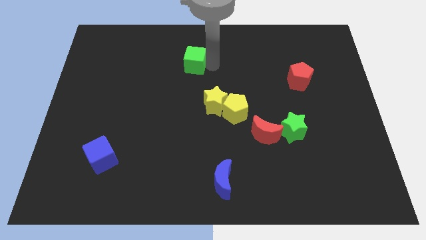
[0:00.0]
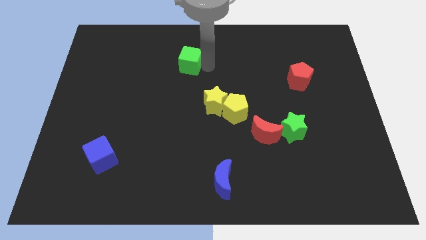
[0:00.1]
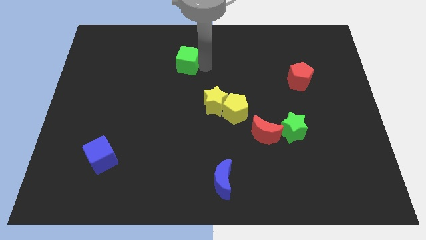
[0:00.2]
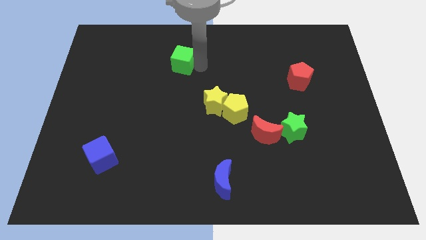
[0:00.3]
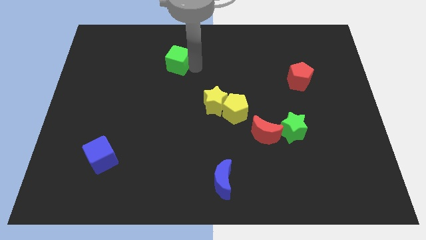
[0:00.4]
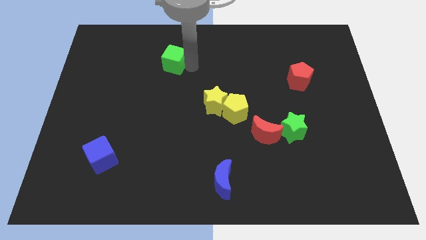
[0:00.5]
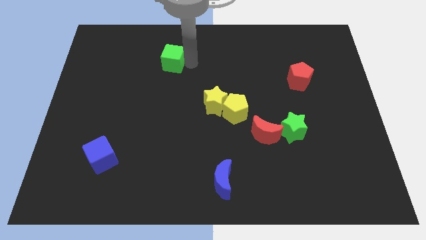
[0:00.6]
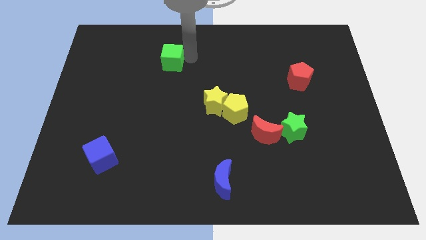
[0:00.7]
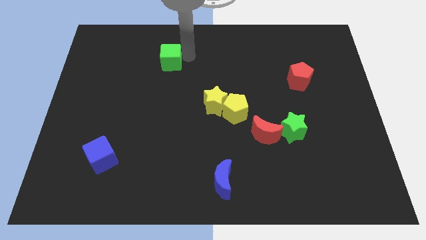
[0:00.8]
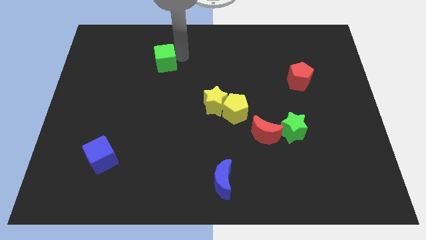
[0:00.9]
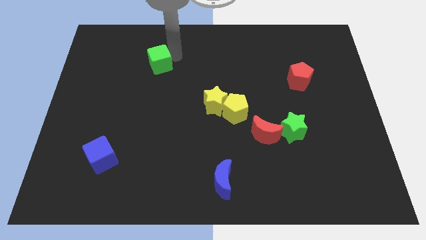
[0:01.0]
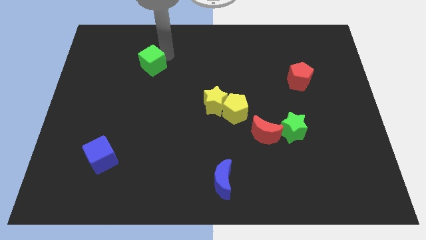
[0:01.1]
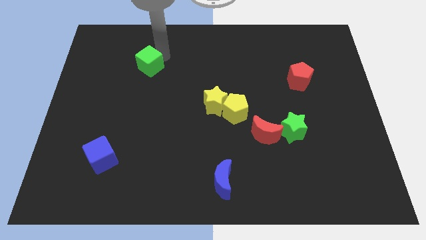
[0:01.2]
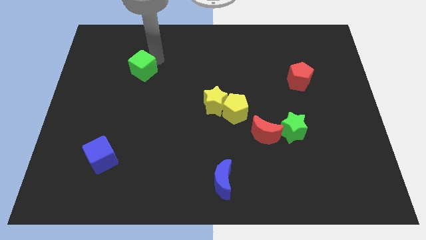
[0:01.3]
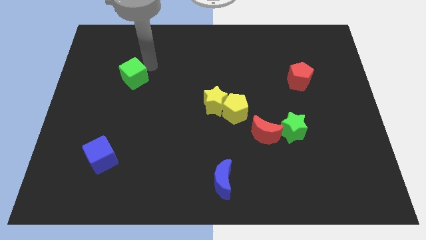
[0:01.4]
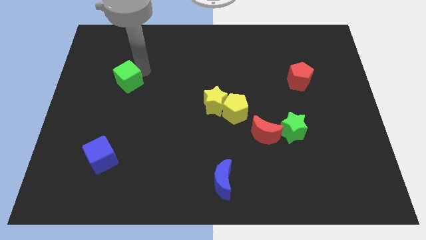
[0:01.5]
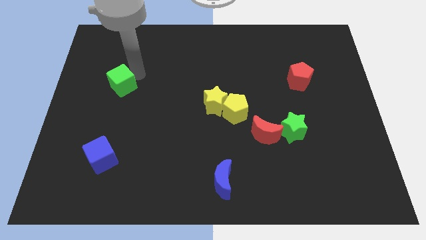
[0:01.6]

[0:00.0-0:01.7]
push the green cube to the left center of the board

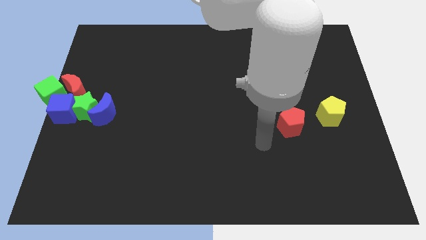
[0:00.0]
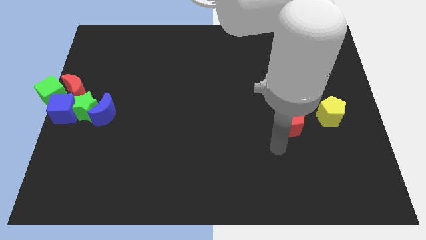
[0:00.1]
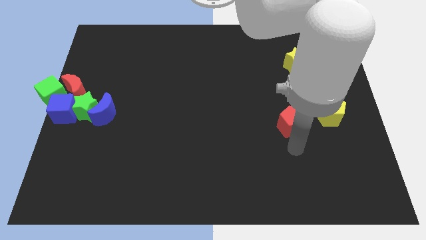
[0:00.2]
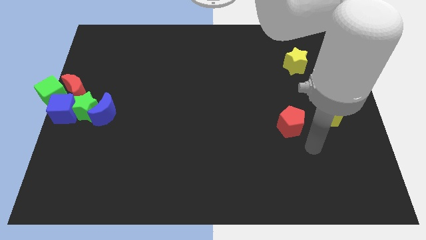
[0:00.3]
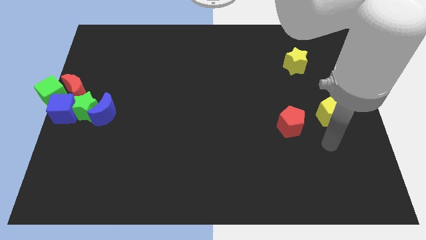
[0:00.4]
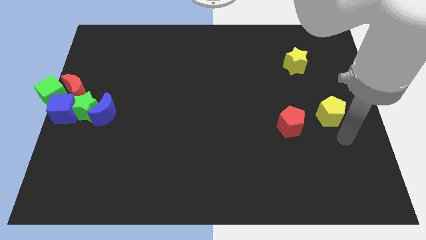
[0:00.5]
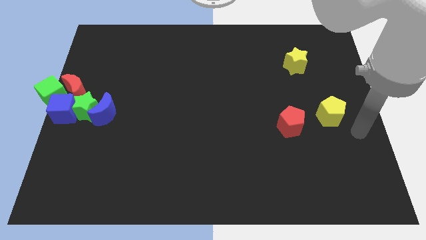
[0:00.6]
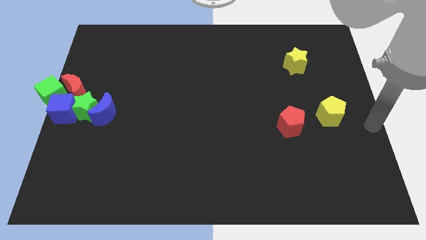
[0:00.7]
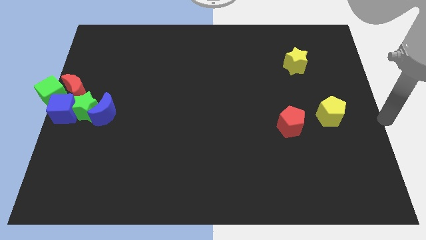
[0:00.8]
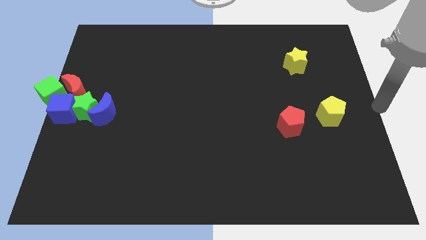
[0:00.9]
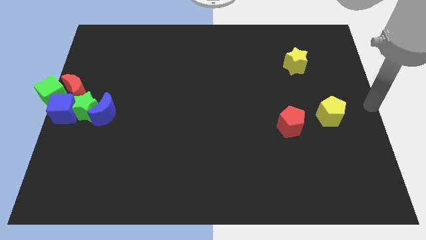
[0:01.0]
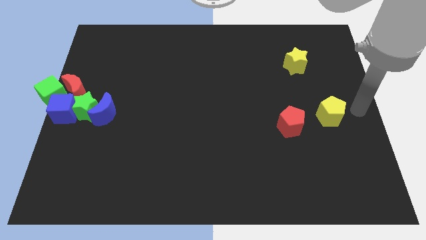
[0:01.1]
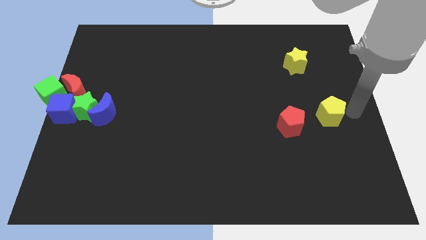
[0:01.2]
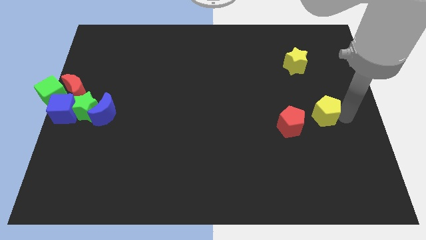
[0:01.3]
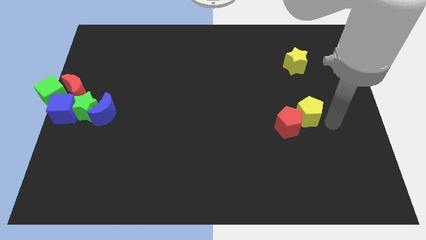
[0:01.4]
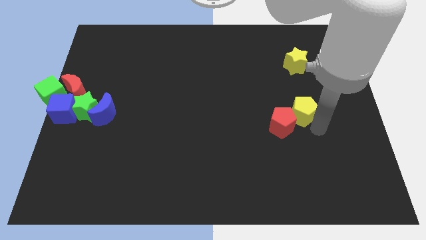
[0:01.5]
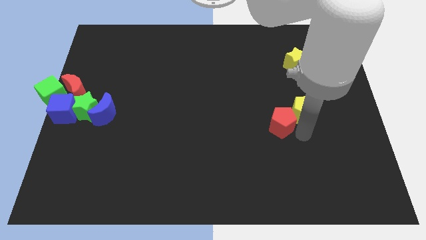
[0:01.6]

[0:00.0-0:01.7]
push the yellow pentagon into the red pentagon

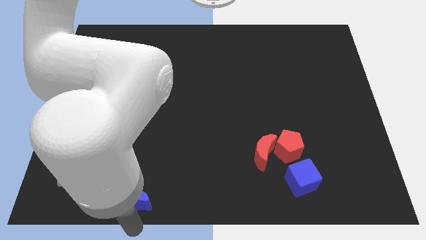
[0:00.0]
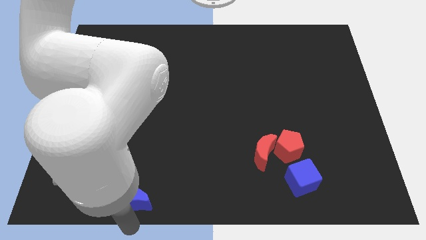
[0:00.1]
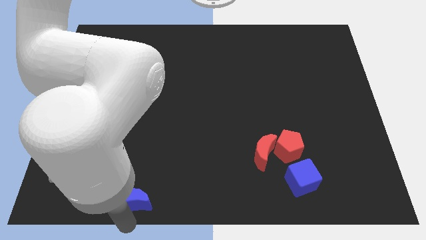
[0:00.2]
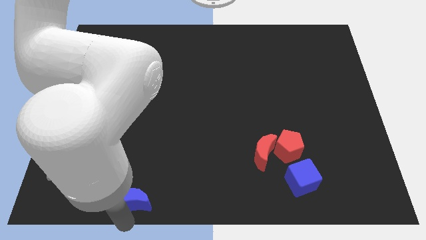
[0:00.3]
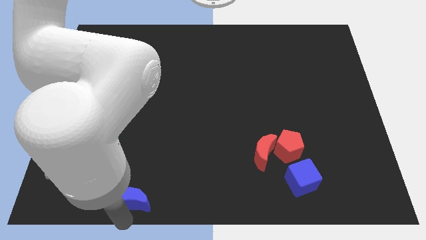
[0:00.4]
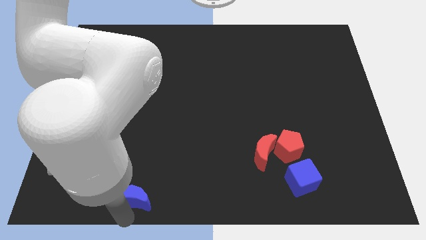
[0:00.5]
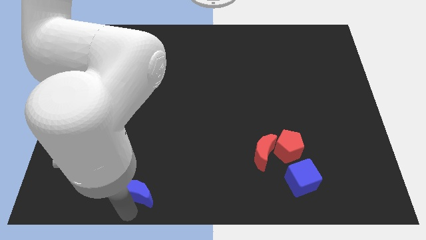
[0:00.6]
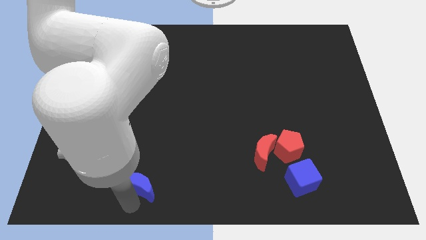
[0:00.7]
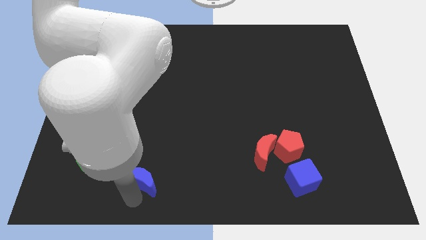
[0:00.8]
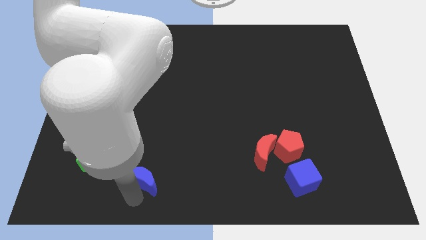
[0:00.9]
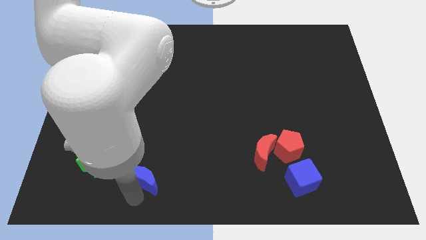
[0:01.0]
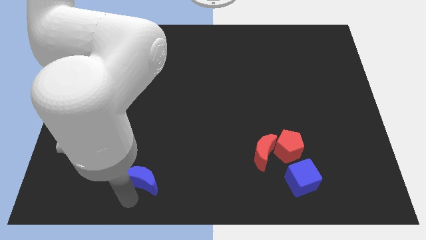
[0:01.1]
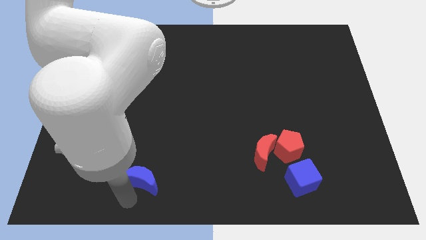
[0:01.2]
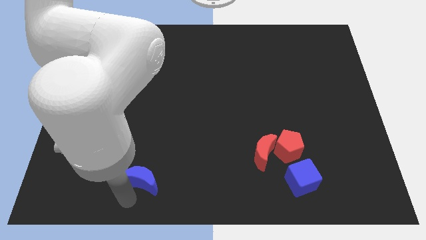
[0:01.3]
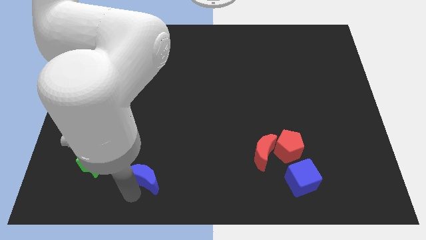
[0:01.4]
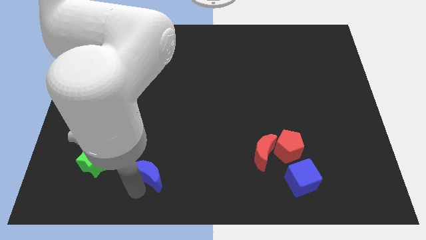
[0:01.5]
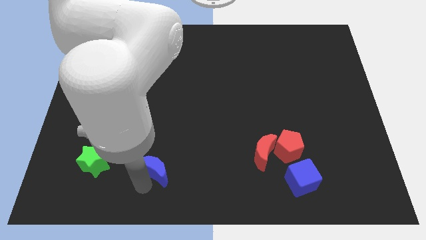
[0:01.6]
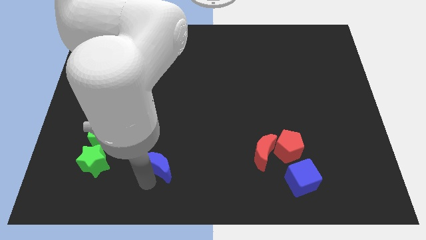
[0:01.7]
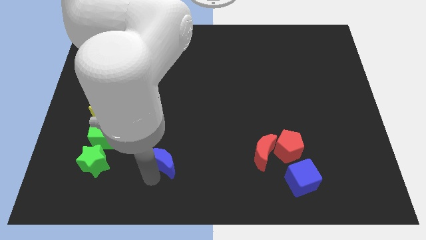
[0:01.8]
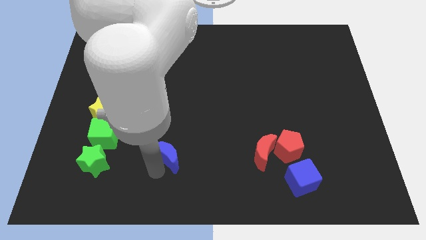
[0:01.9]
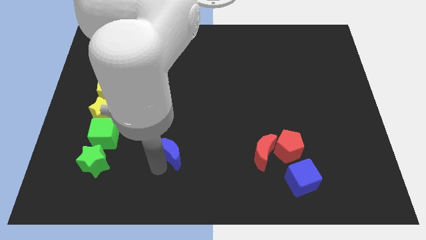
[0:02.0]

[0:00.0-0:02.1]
move blue moon parallel to red moon

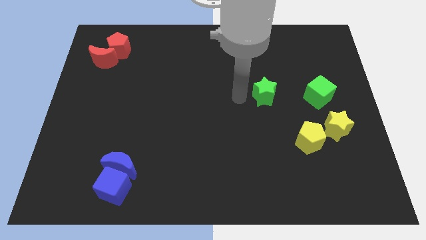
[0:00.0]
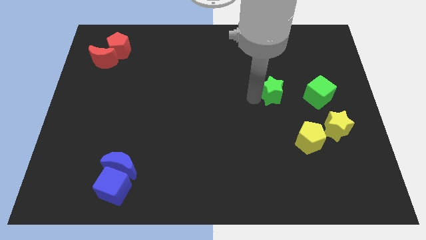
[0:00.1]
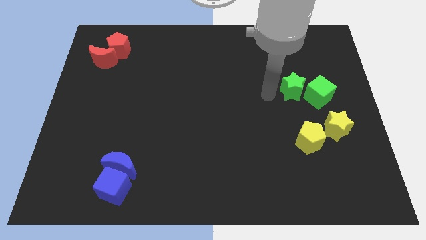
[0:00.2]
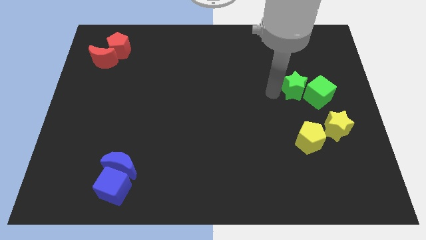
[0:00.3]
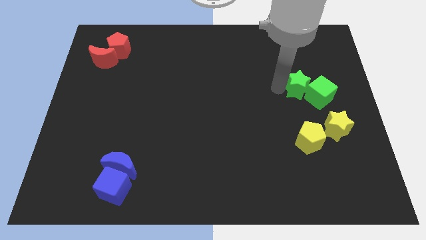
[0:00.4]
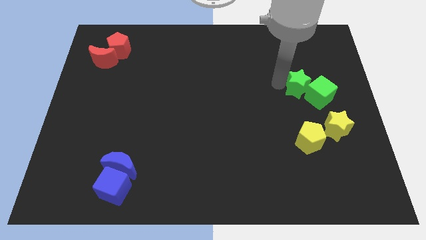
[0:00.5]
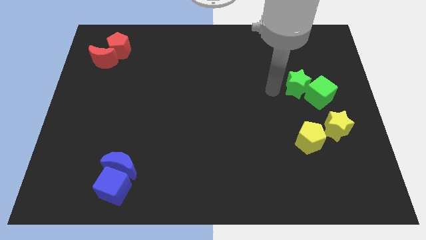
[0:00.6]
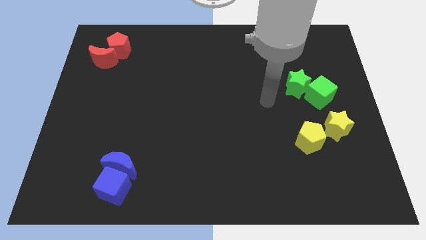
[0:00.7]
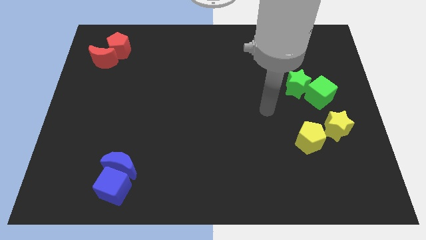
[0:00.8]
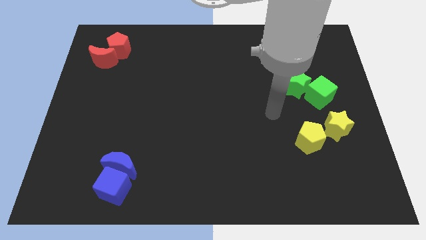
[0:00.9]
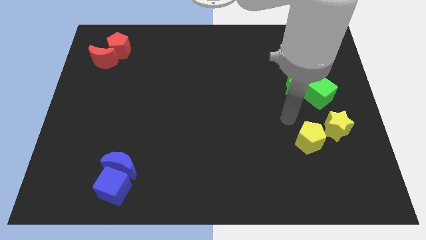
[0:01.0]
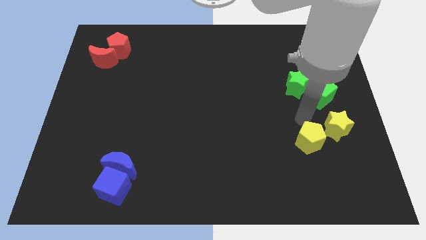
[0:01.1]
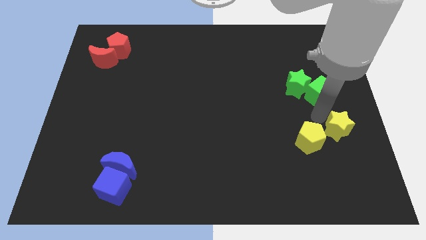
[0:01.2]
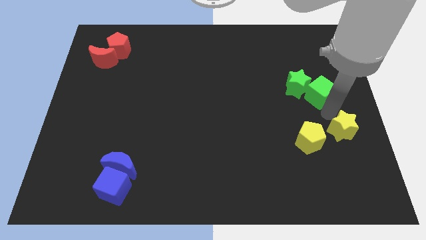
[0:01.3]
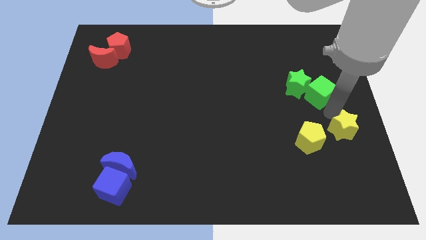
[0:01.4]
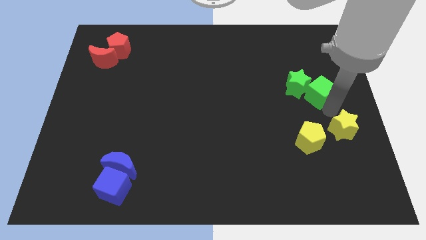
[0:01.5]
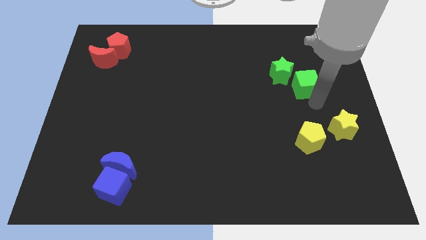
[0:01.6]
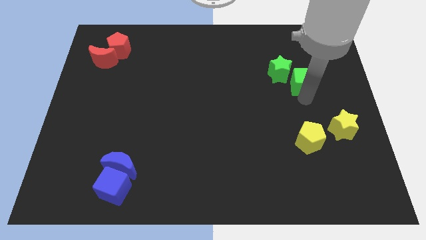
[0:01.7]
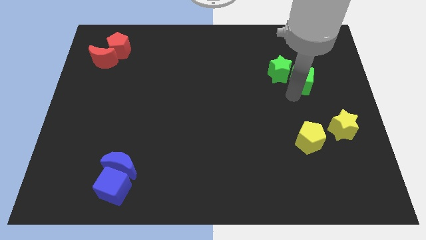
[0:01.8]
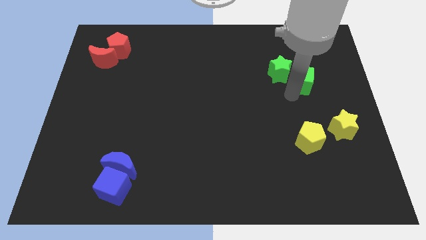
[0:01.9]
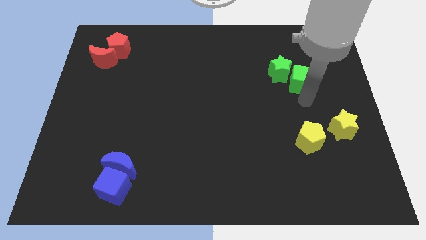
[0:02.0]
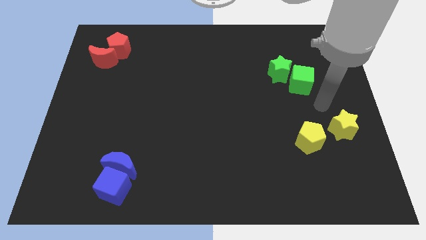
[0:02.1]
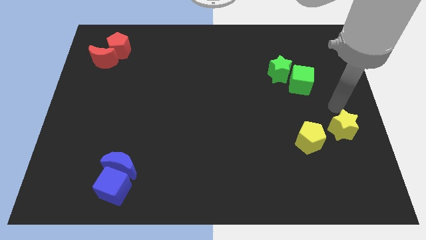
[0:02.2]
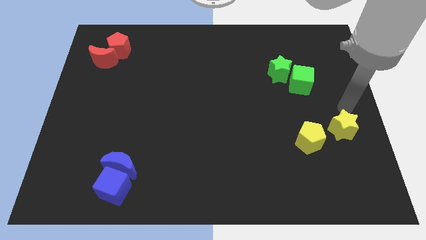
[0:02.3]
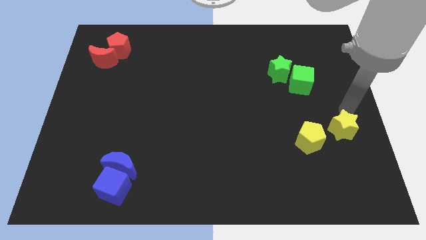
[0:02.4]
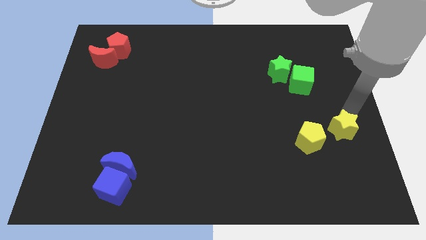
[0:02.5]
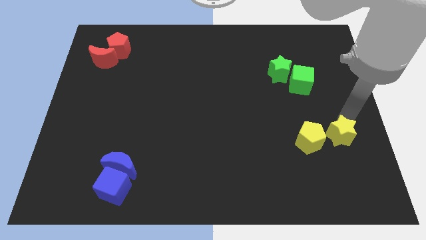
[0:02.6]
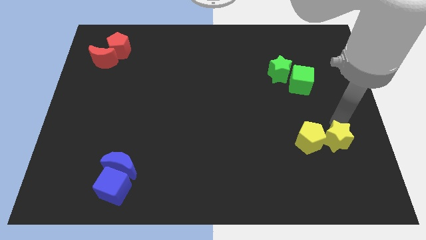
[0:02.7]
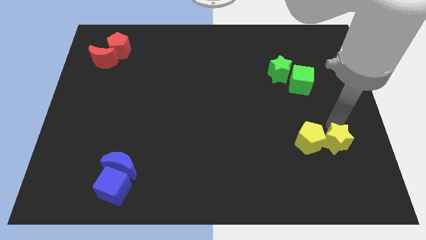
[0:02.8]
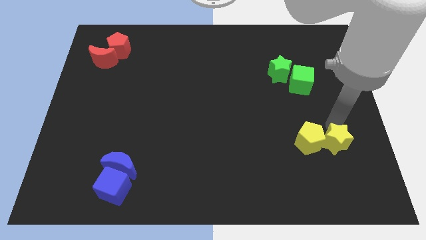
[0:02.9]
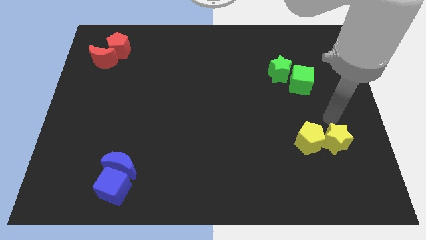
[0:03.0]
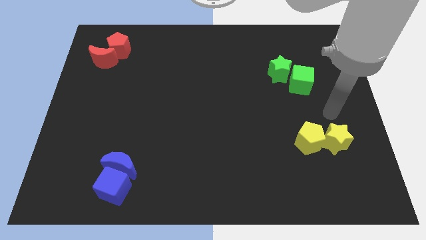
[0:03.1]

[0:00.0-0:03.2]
adjust the blue blocks and yellow blocks diagonal to each other

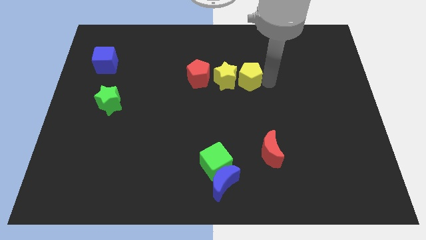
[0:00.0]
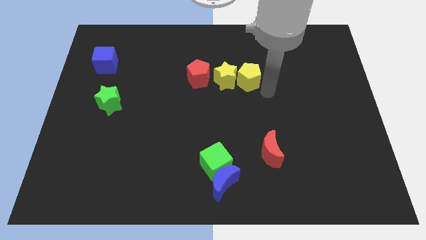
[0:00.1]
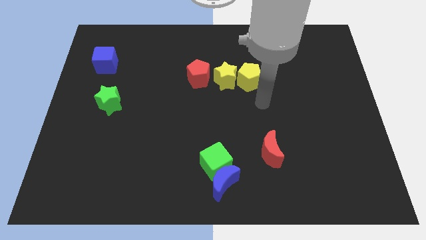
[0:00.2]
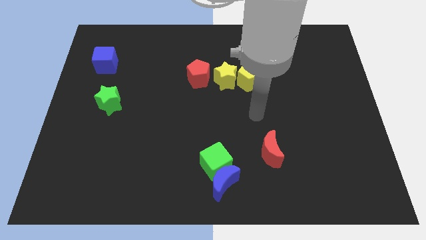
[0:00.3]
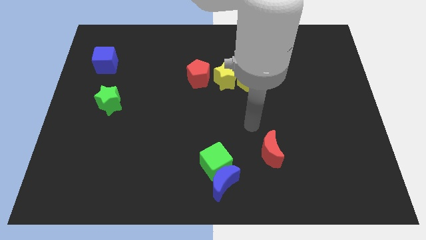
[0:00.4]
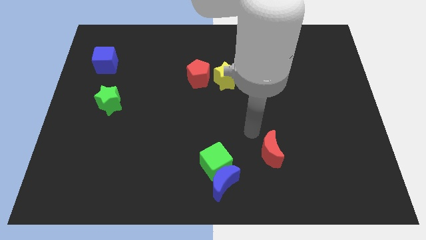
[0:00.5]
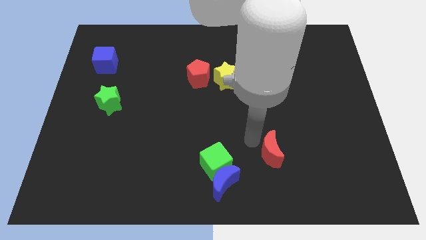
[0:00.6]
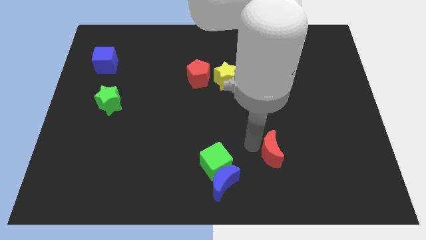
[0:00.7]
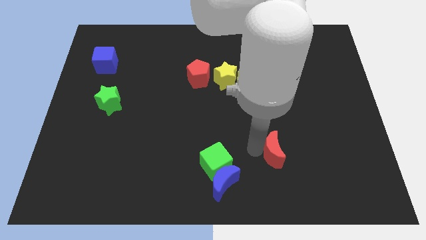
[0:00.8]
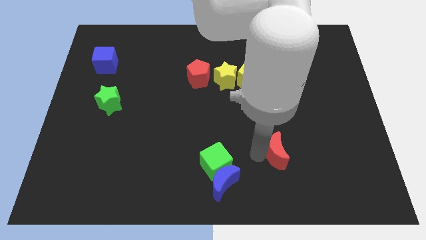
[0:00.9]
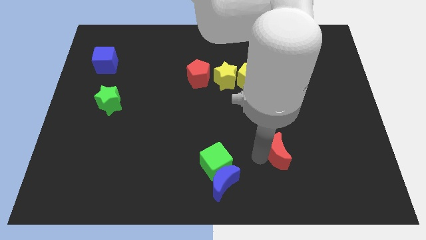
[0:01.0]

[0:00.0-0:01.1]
move your arm away from the yellow pentagon
